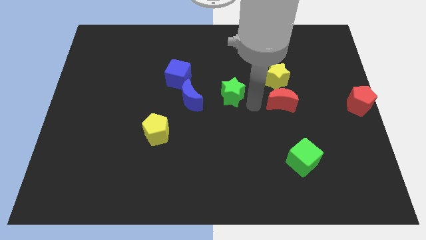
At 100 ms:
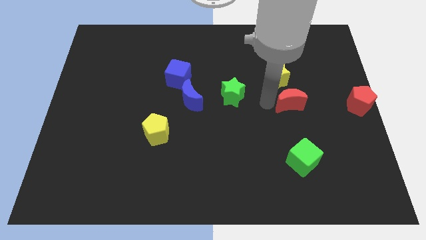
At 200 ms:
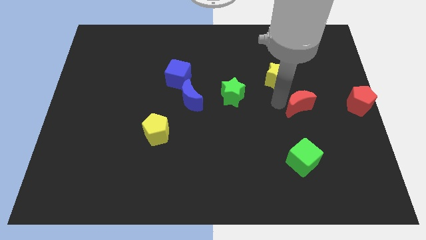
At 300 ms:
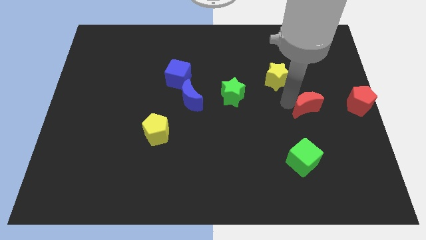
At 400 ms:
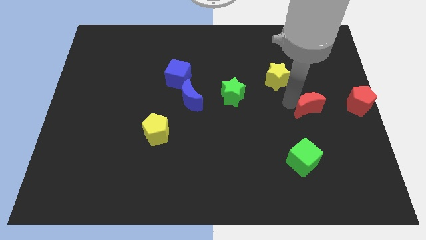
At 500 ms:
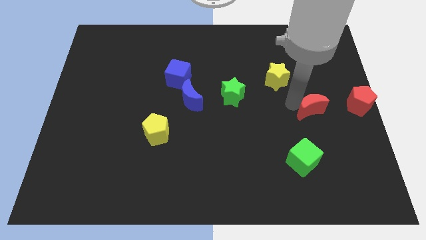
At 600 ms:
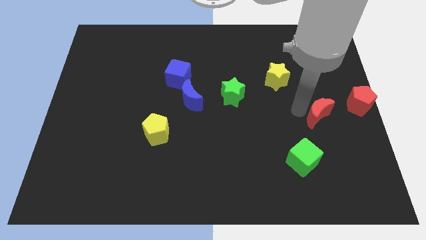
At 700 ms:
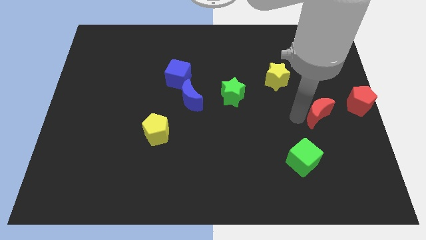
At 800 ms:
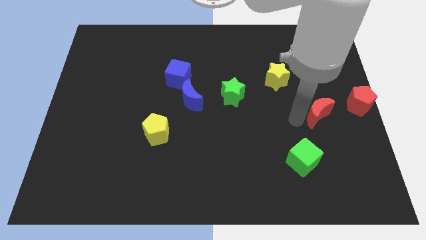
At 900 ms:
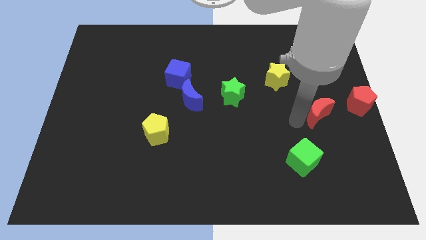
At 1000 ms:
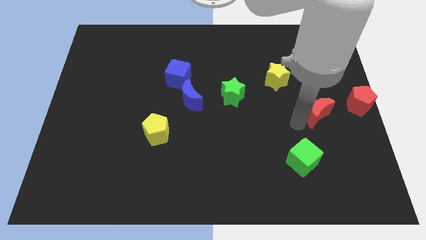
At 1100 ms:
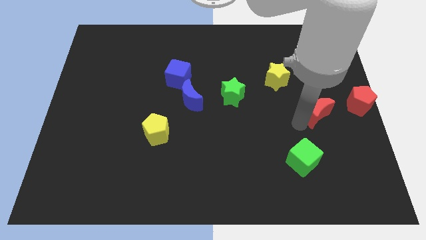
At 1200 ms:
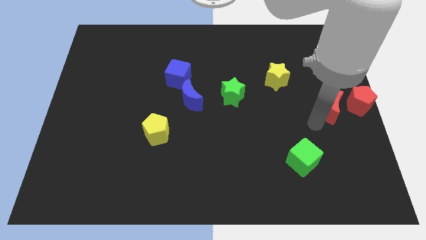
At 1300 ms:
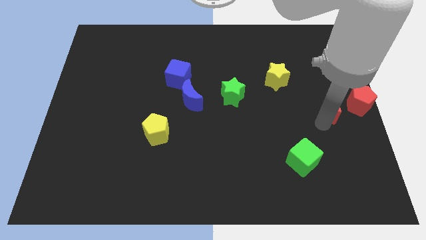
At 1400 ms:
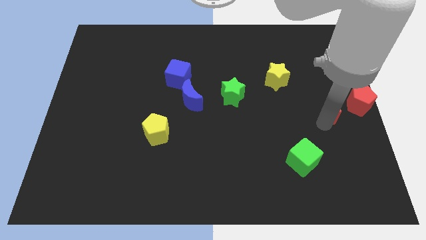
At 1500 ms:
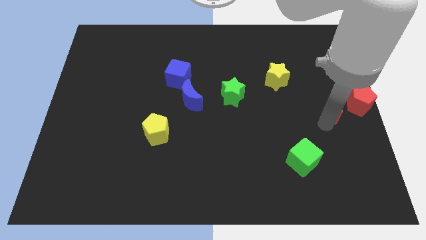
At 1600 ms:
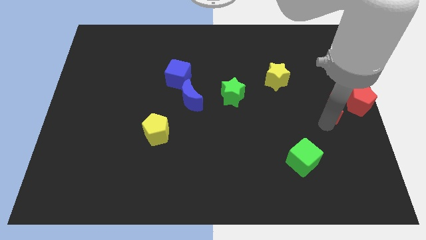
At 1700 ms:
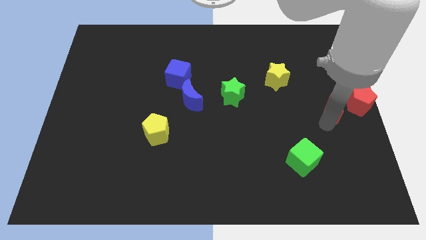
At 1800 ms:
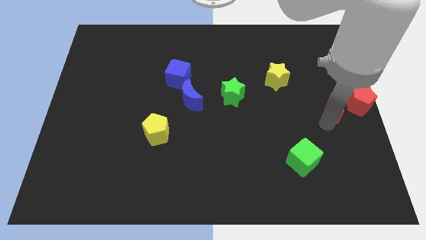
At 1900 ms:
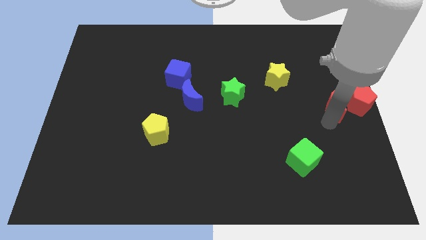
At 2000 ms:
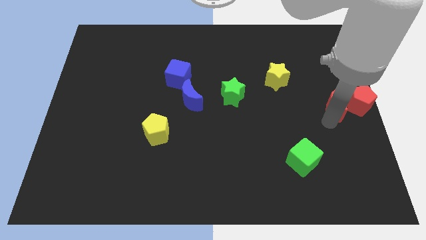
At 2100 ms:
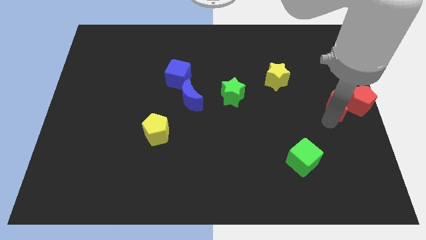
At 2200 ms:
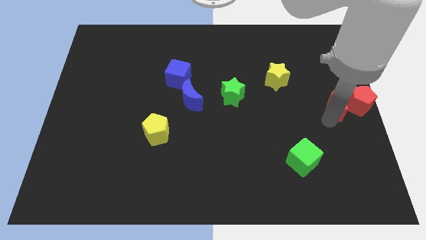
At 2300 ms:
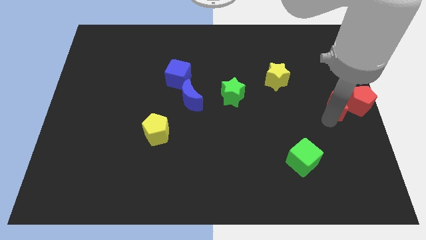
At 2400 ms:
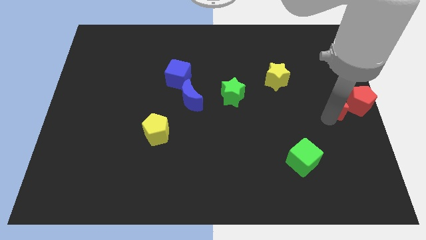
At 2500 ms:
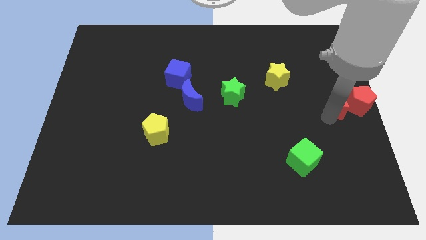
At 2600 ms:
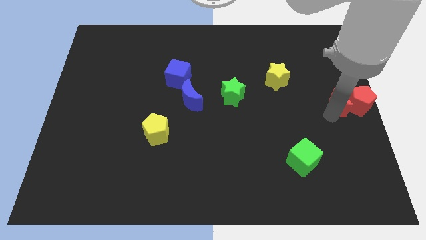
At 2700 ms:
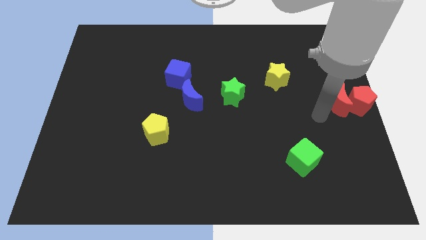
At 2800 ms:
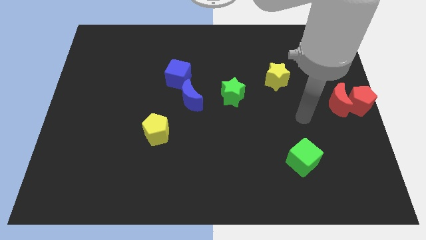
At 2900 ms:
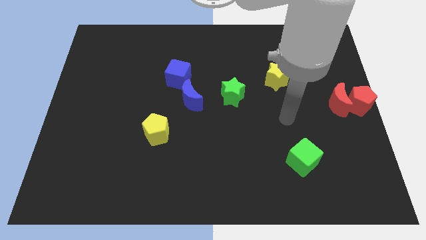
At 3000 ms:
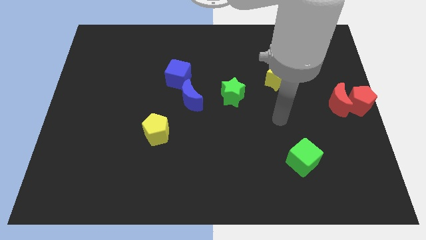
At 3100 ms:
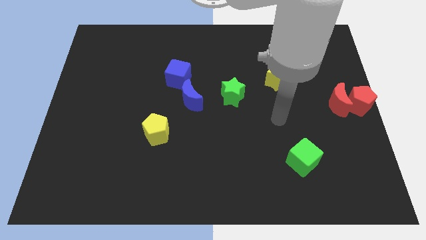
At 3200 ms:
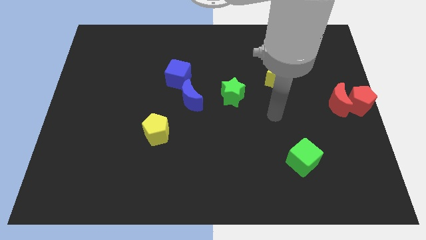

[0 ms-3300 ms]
put the red crescent to the left side of the red pentagon

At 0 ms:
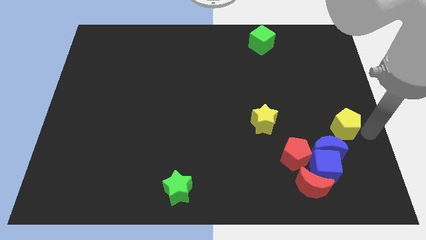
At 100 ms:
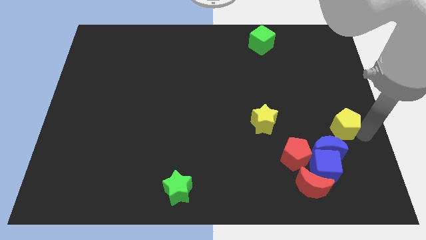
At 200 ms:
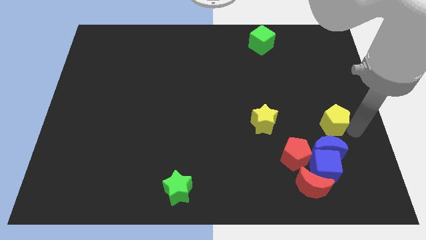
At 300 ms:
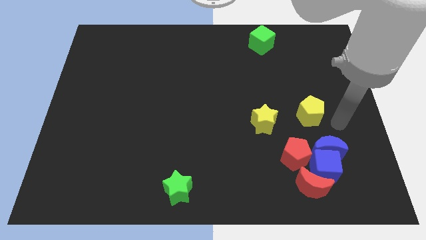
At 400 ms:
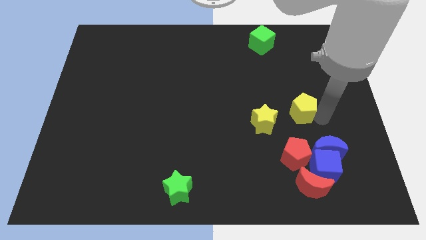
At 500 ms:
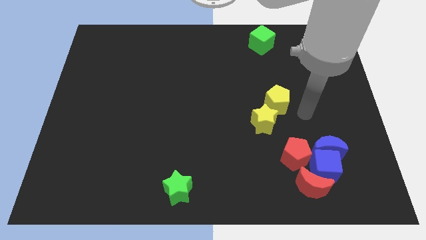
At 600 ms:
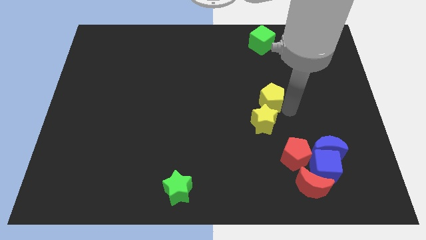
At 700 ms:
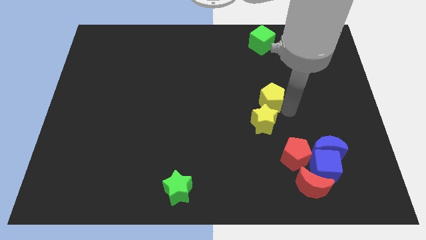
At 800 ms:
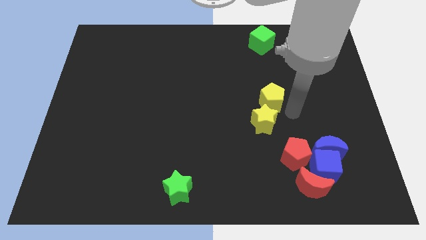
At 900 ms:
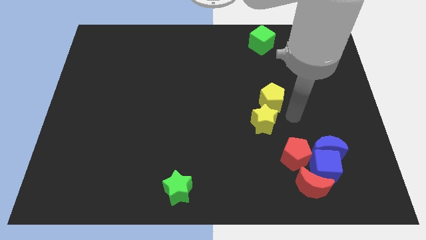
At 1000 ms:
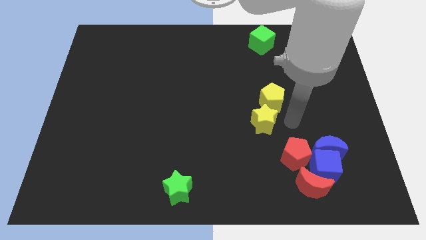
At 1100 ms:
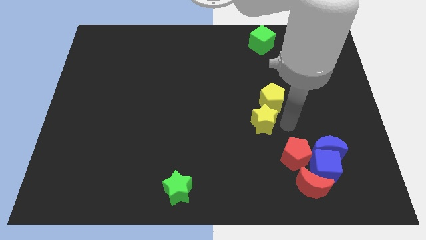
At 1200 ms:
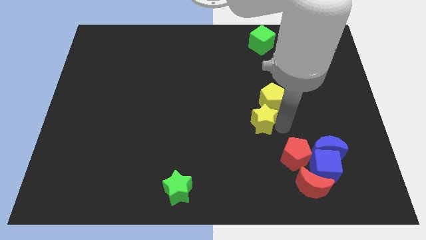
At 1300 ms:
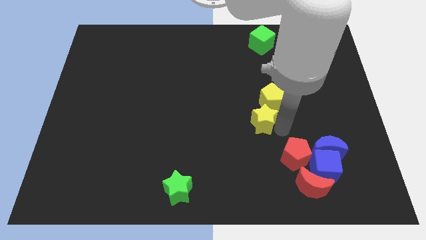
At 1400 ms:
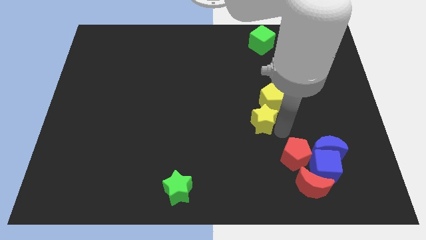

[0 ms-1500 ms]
place the yellow pentagon on the top right side of the yellow star

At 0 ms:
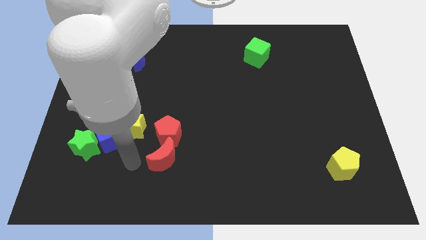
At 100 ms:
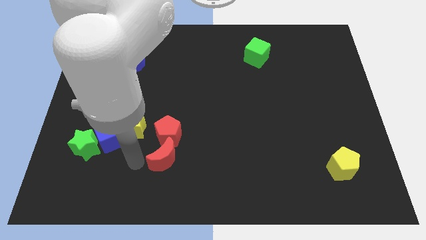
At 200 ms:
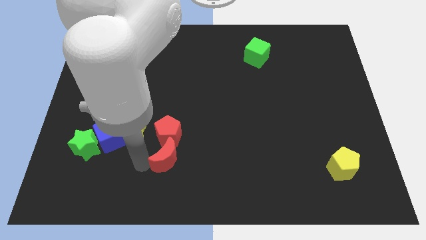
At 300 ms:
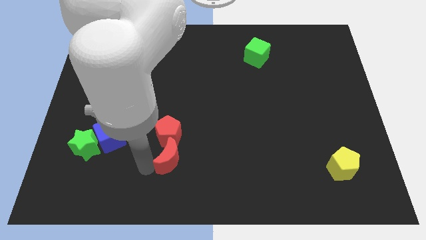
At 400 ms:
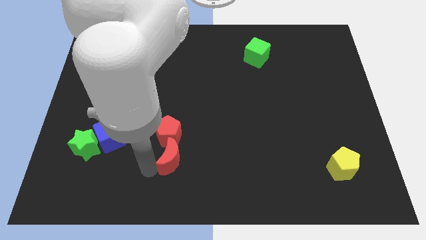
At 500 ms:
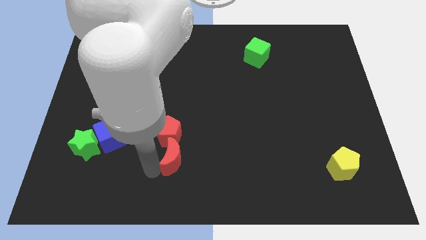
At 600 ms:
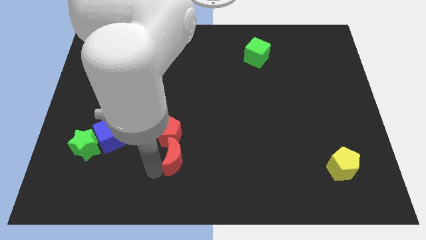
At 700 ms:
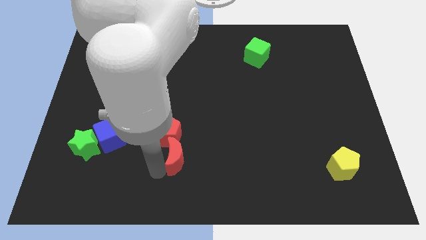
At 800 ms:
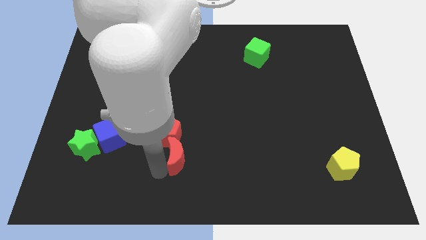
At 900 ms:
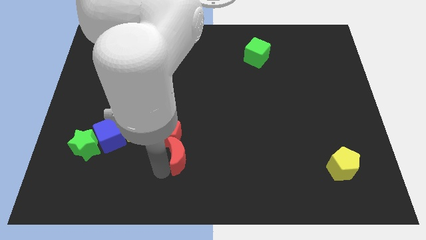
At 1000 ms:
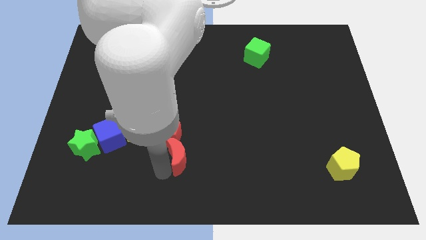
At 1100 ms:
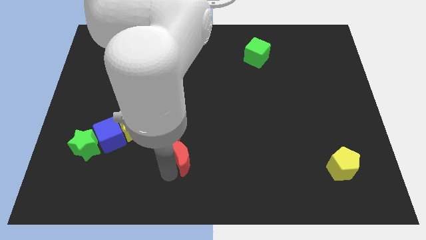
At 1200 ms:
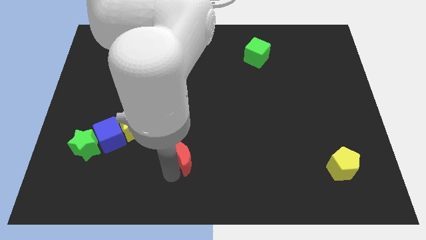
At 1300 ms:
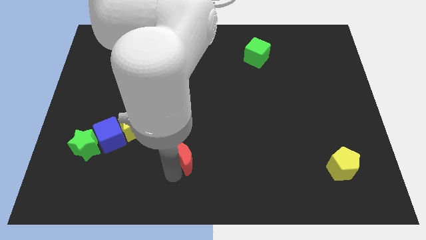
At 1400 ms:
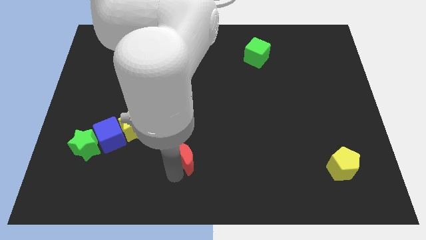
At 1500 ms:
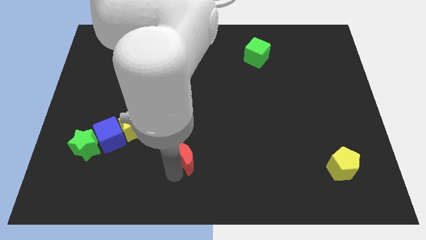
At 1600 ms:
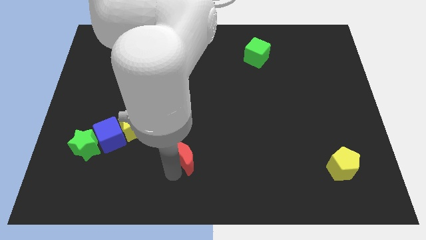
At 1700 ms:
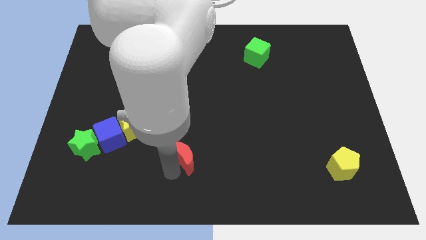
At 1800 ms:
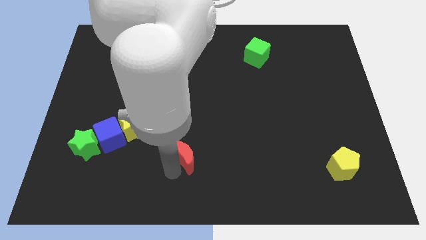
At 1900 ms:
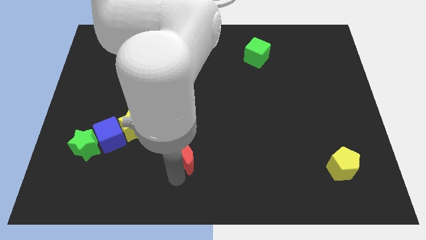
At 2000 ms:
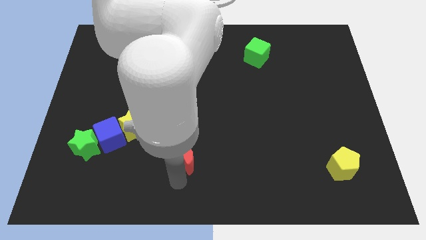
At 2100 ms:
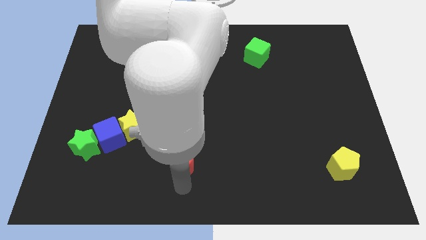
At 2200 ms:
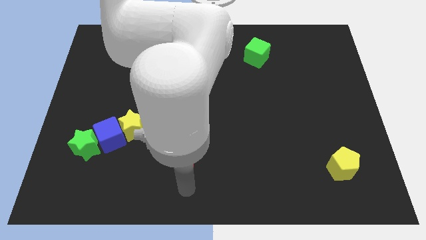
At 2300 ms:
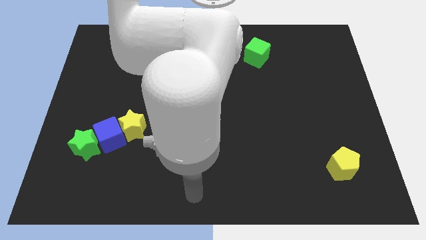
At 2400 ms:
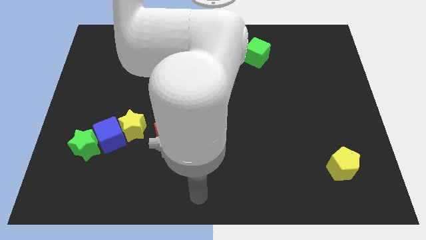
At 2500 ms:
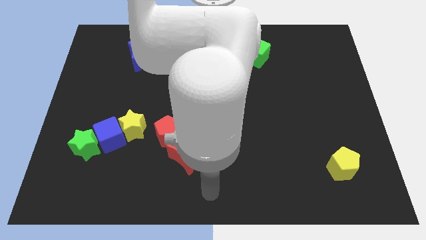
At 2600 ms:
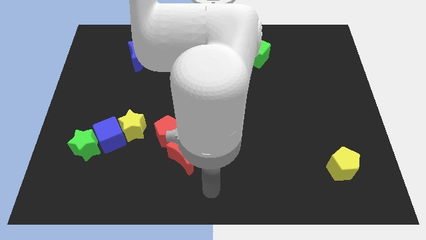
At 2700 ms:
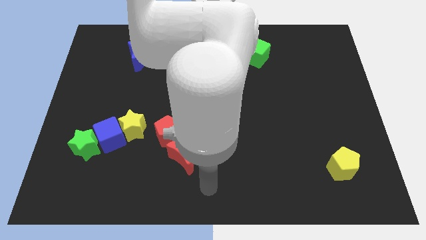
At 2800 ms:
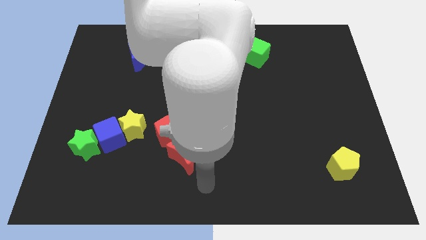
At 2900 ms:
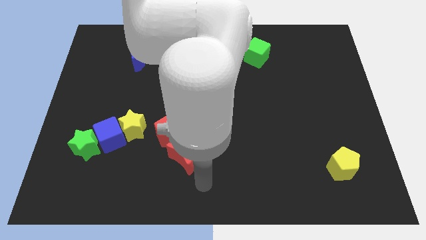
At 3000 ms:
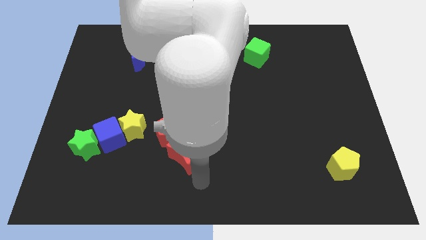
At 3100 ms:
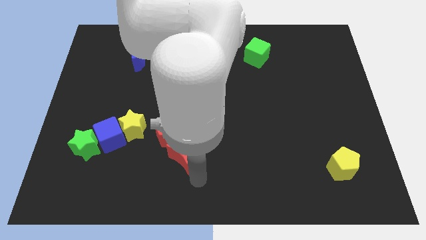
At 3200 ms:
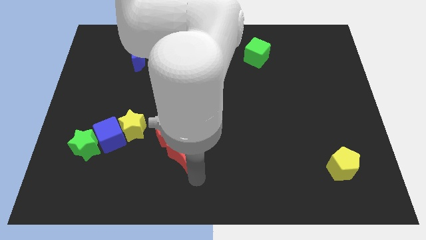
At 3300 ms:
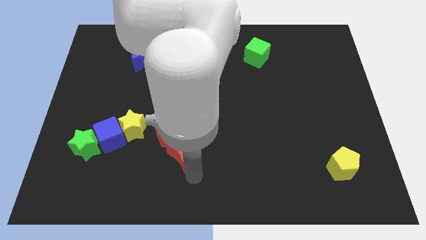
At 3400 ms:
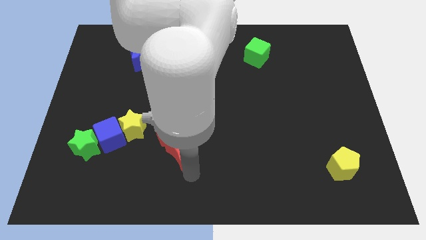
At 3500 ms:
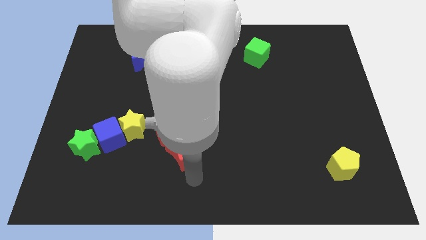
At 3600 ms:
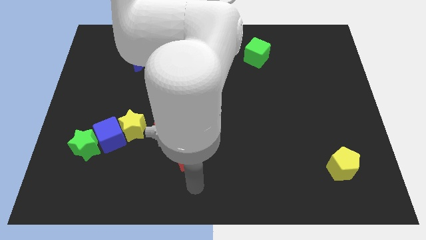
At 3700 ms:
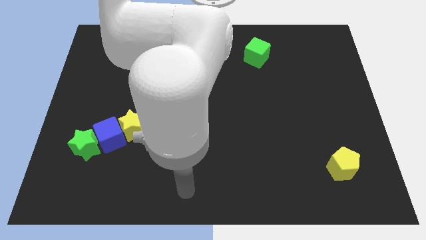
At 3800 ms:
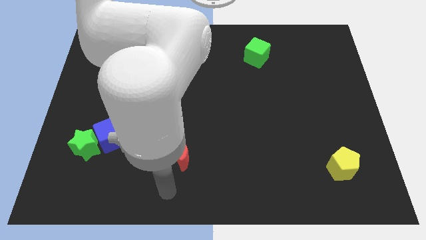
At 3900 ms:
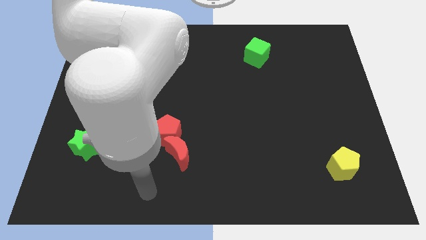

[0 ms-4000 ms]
slightly push the red moon towards the bottom right of the red pentagon
